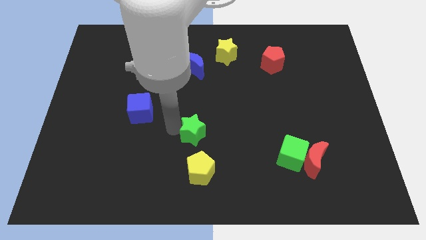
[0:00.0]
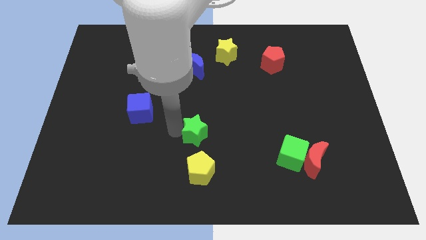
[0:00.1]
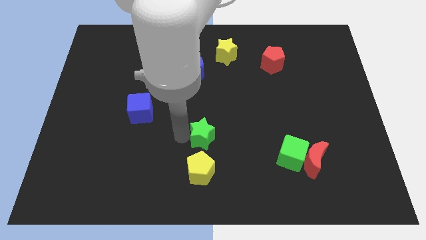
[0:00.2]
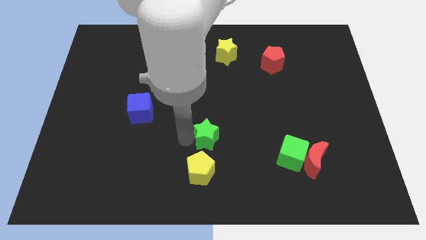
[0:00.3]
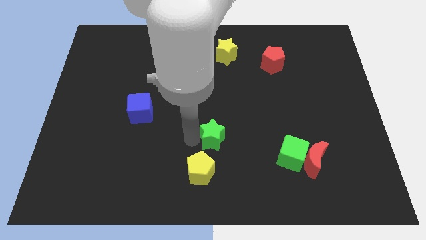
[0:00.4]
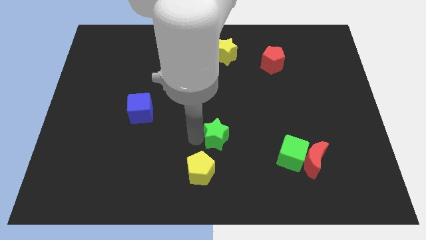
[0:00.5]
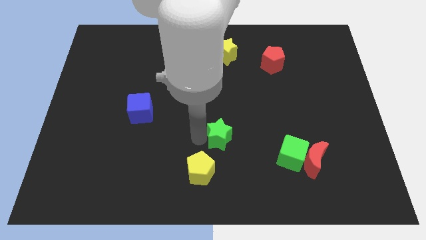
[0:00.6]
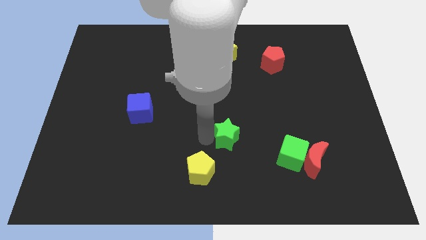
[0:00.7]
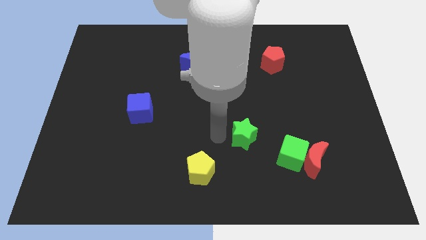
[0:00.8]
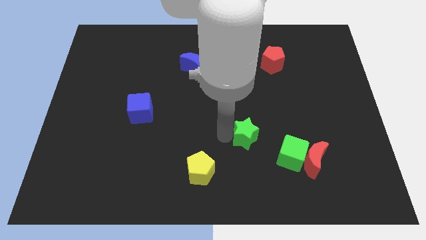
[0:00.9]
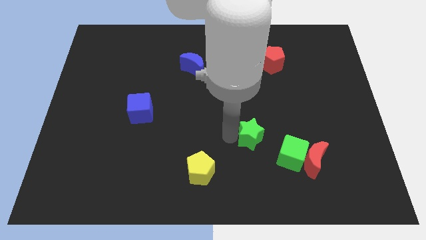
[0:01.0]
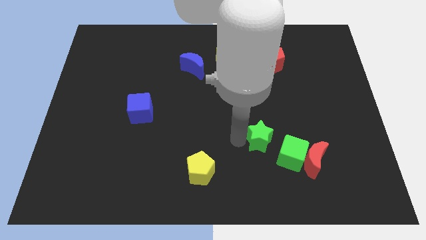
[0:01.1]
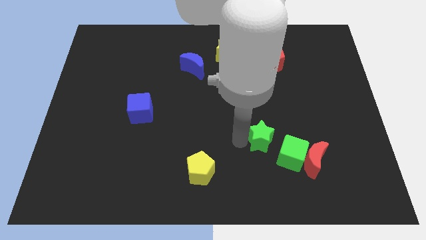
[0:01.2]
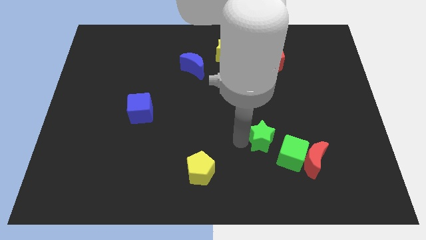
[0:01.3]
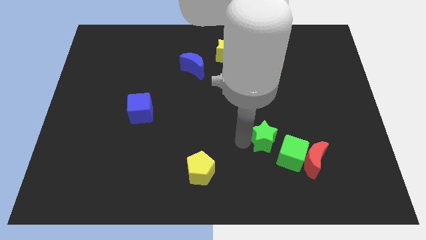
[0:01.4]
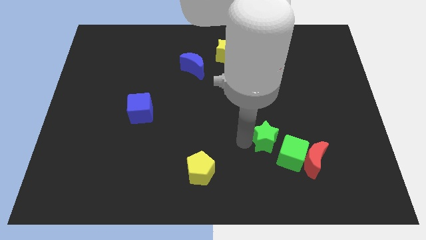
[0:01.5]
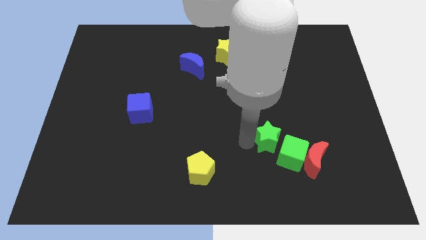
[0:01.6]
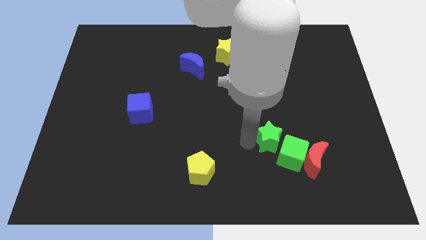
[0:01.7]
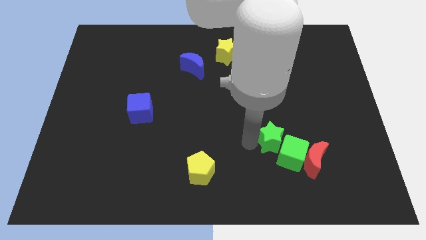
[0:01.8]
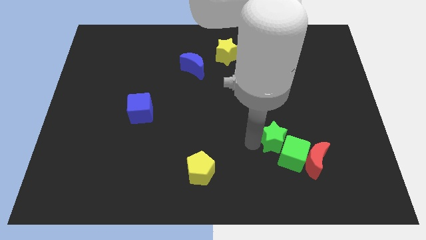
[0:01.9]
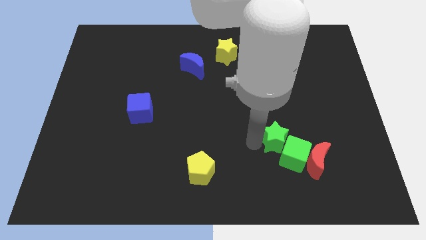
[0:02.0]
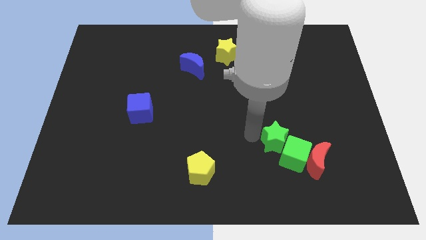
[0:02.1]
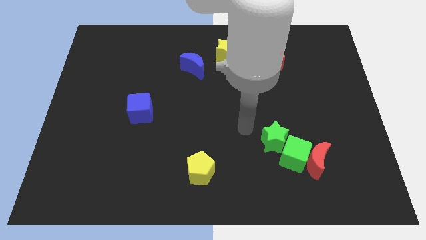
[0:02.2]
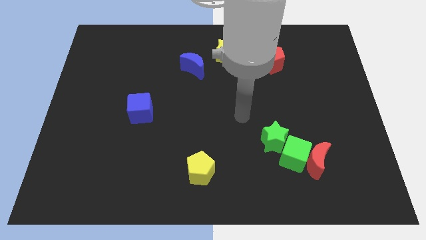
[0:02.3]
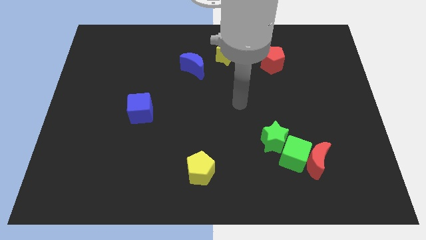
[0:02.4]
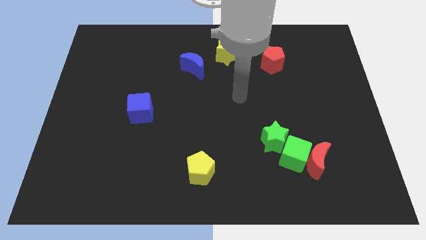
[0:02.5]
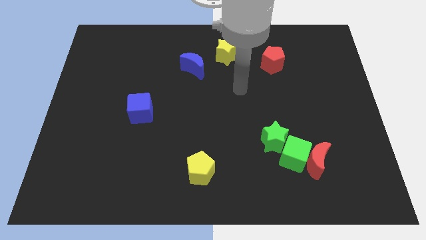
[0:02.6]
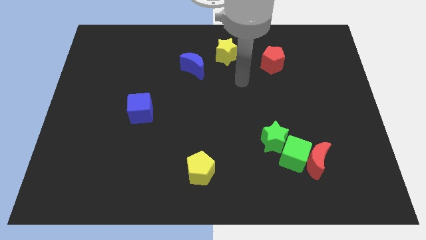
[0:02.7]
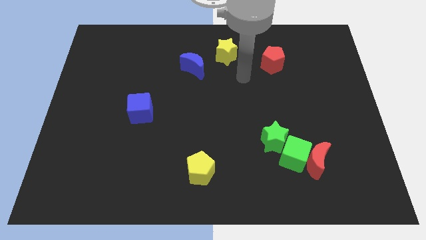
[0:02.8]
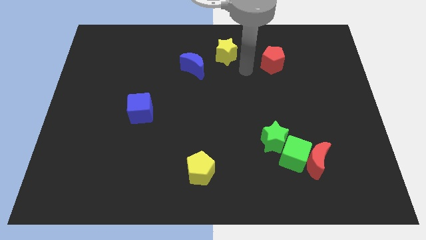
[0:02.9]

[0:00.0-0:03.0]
push the green star into the green cube and go away

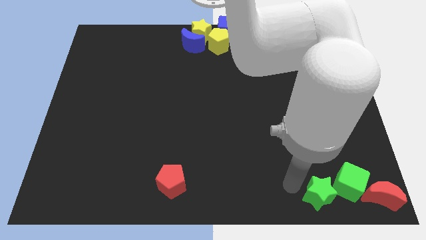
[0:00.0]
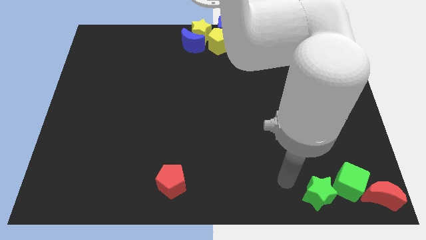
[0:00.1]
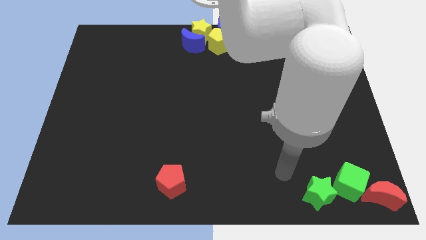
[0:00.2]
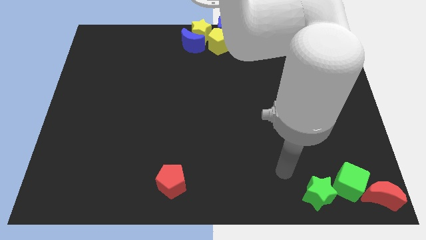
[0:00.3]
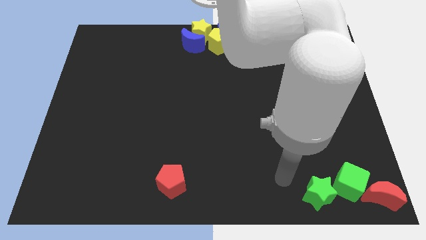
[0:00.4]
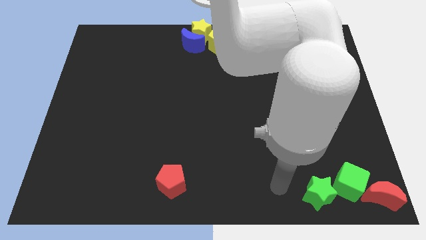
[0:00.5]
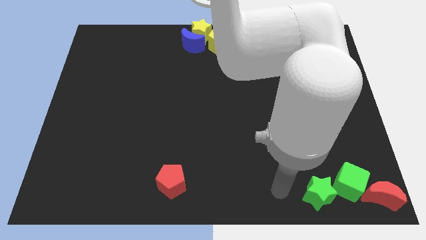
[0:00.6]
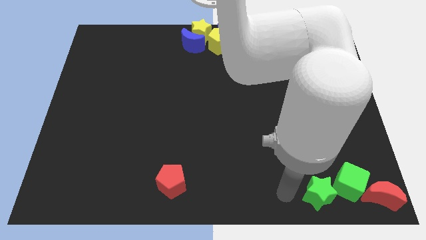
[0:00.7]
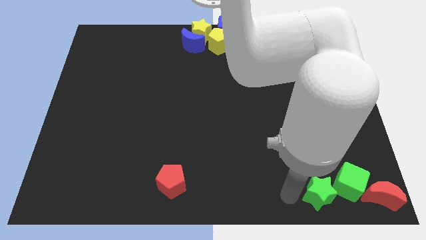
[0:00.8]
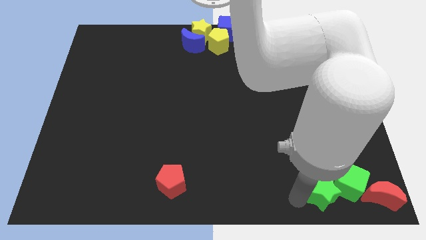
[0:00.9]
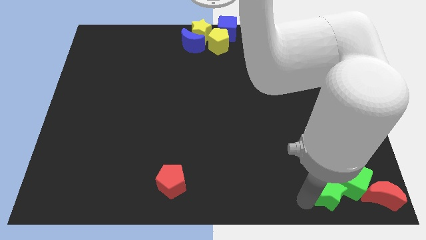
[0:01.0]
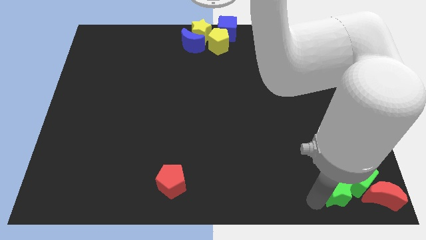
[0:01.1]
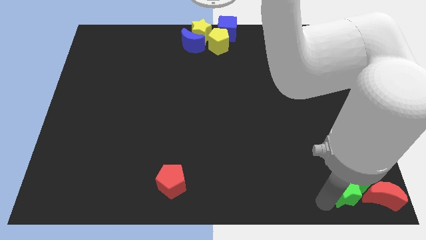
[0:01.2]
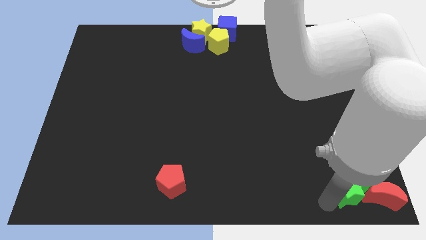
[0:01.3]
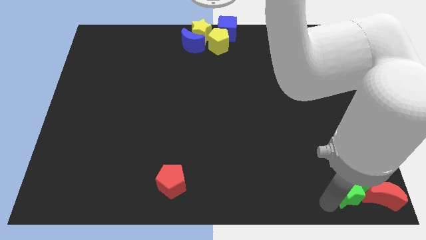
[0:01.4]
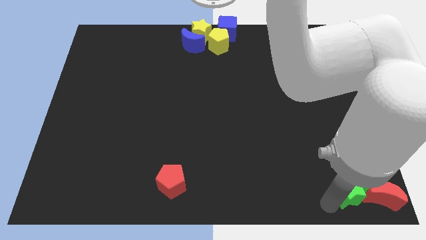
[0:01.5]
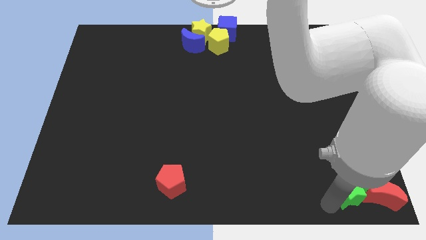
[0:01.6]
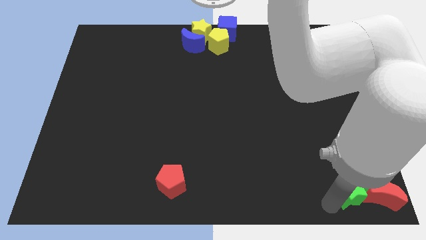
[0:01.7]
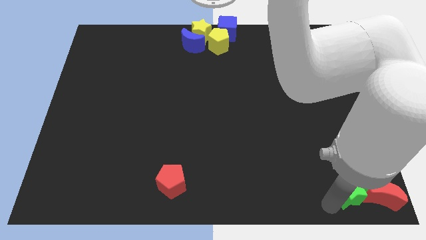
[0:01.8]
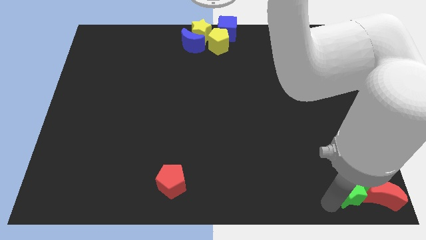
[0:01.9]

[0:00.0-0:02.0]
push the group of green blocks into the red crescent

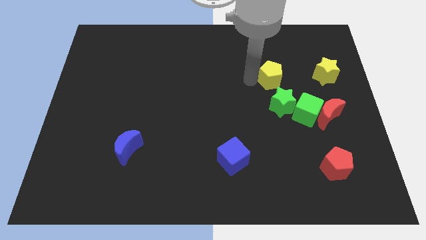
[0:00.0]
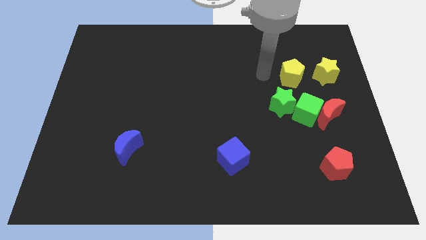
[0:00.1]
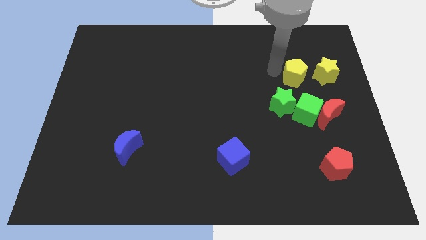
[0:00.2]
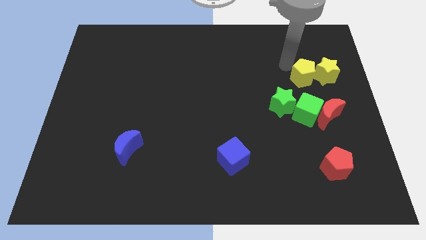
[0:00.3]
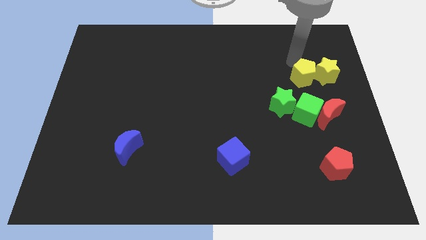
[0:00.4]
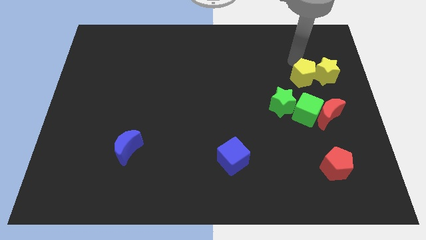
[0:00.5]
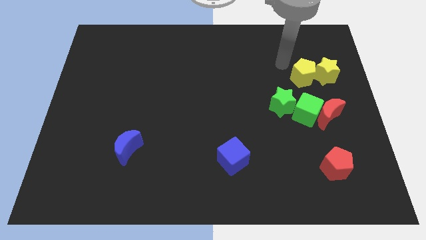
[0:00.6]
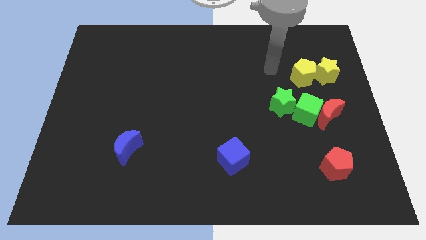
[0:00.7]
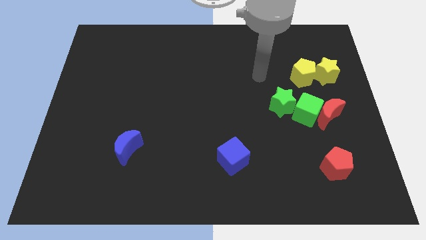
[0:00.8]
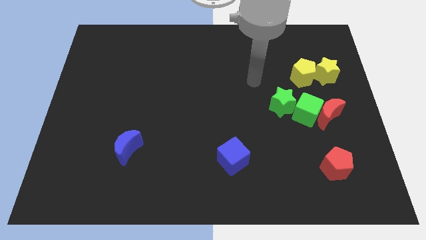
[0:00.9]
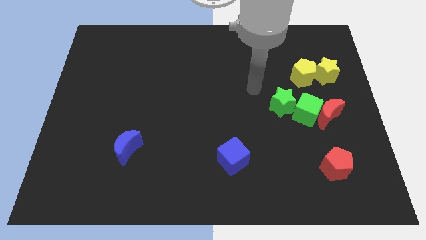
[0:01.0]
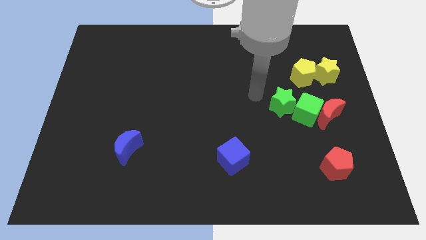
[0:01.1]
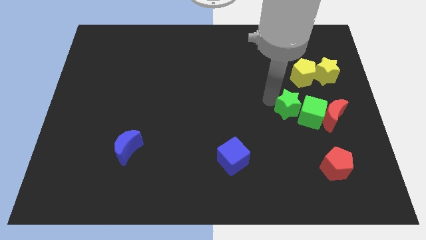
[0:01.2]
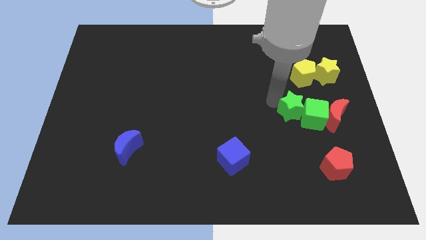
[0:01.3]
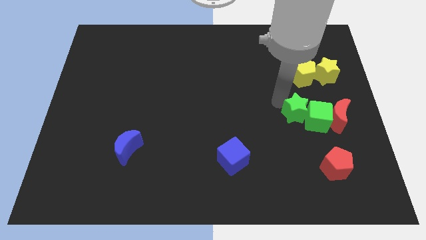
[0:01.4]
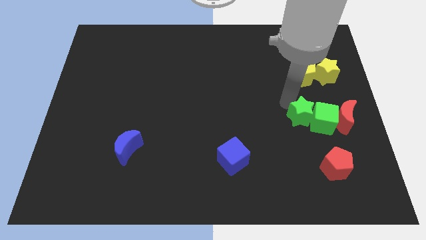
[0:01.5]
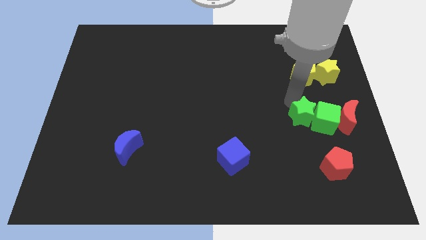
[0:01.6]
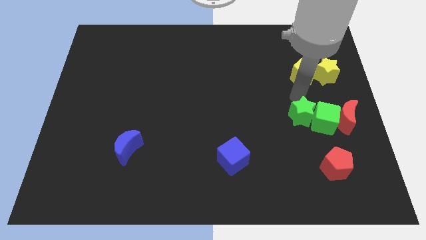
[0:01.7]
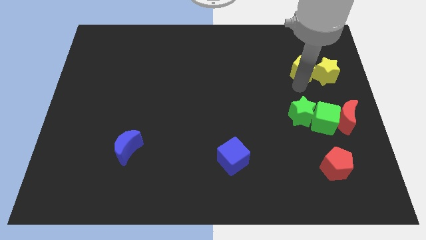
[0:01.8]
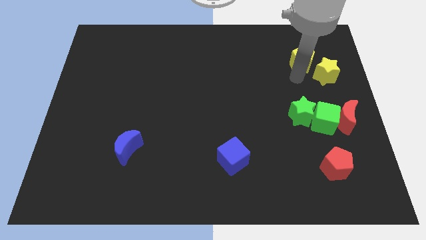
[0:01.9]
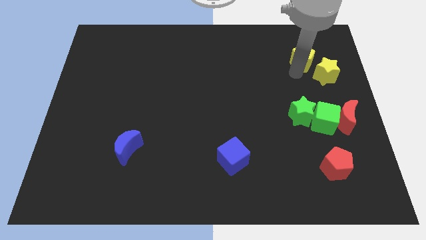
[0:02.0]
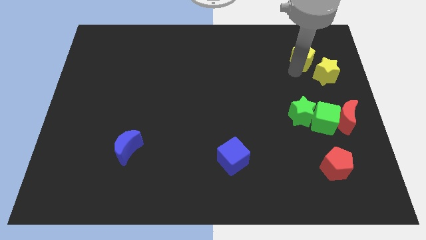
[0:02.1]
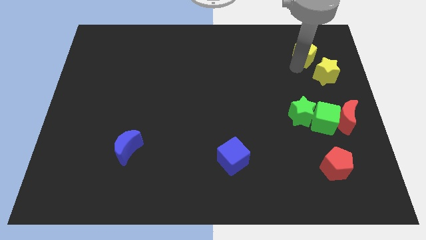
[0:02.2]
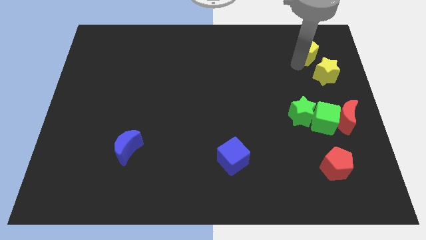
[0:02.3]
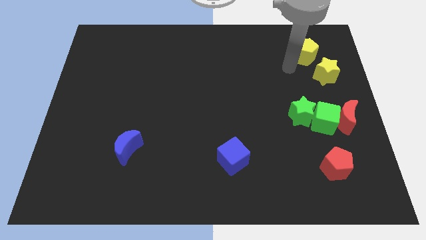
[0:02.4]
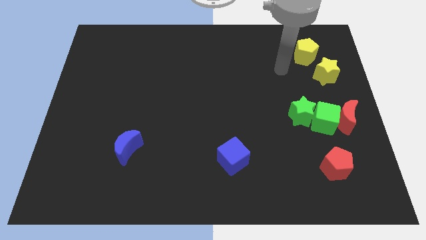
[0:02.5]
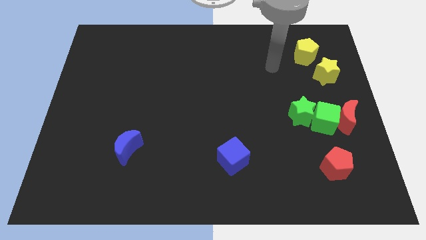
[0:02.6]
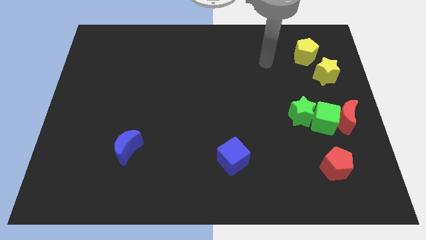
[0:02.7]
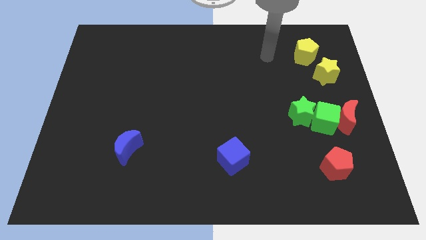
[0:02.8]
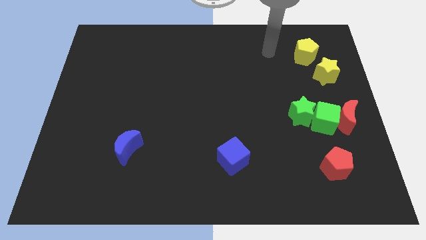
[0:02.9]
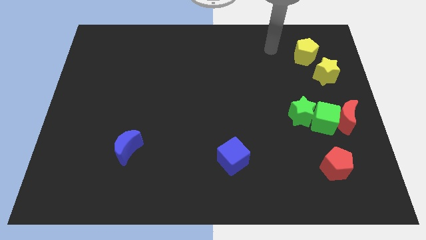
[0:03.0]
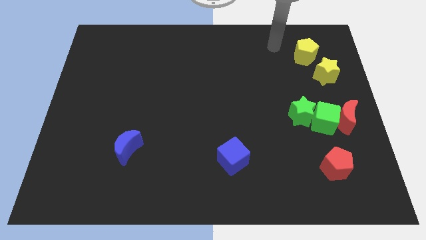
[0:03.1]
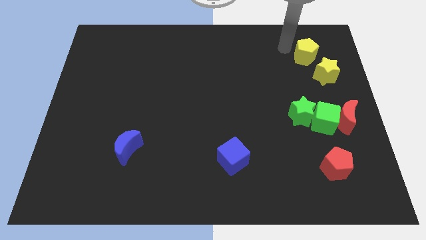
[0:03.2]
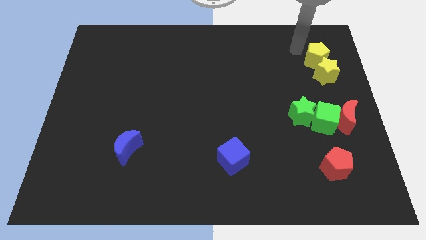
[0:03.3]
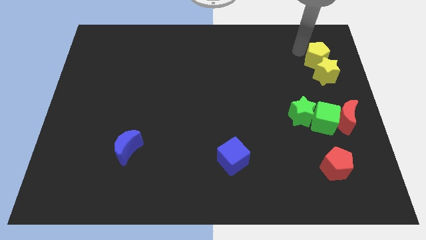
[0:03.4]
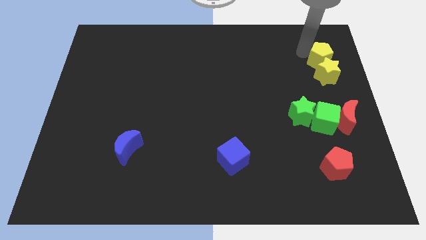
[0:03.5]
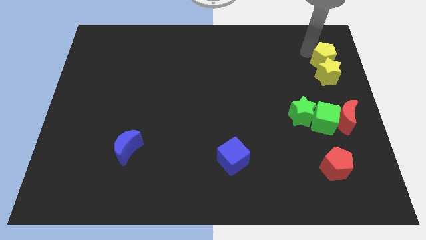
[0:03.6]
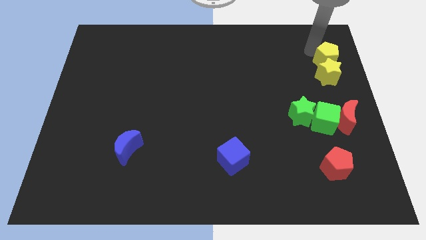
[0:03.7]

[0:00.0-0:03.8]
place yellow pentagon above yellow star
